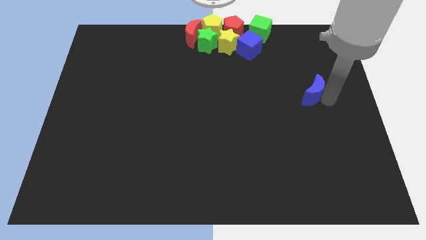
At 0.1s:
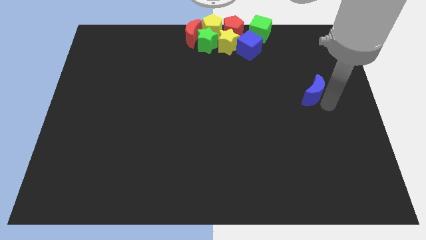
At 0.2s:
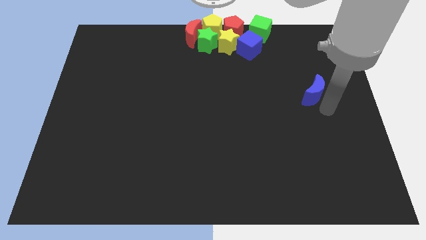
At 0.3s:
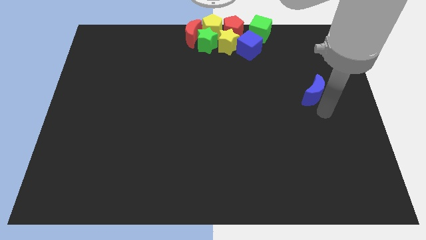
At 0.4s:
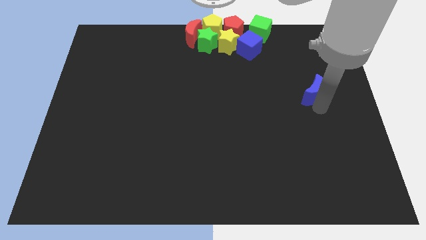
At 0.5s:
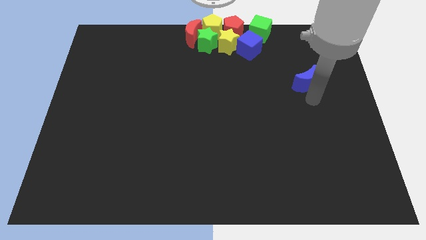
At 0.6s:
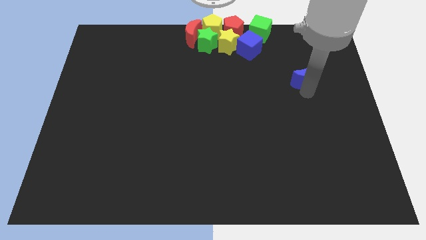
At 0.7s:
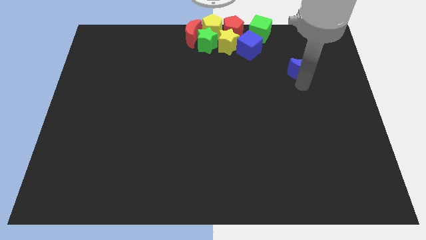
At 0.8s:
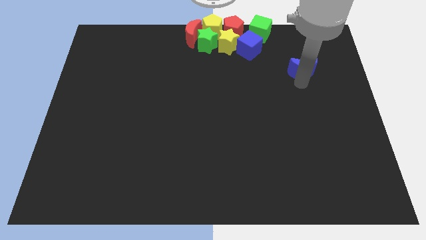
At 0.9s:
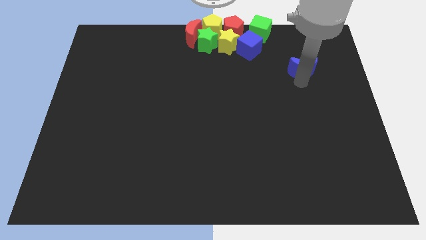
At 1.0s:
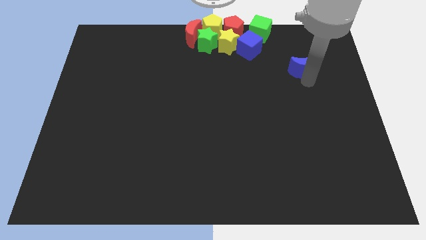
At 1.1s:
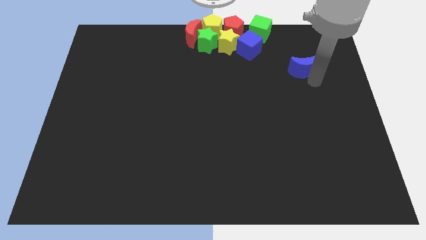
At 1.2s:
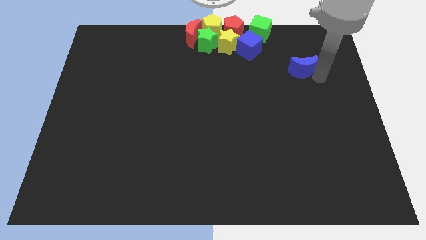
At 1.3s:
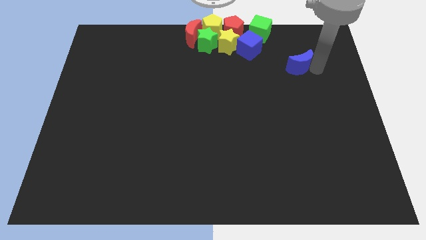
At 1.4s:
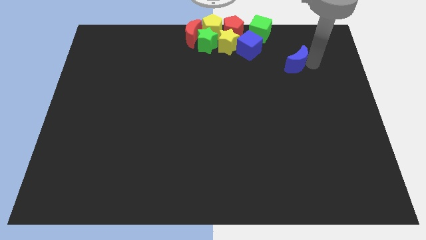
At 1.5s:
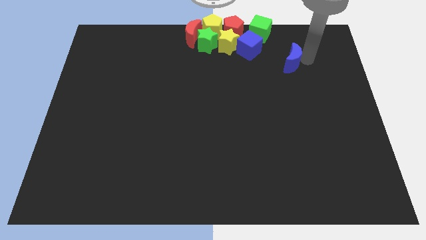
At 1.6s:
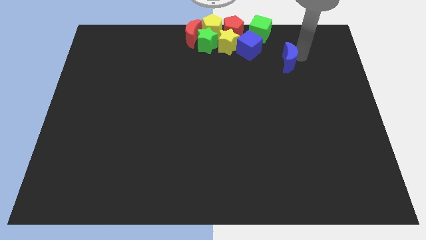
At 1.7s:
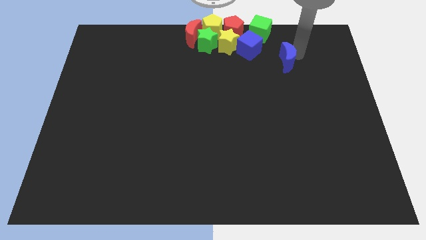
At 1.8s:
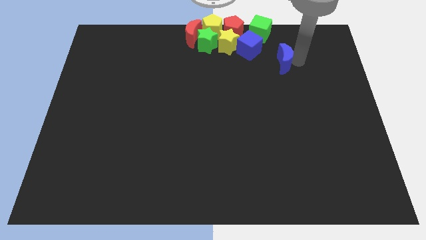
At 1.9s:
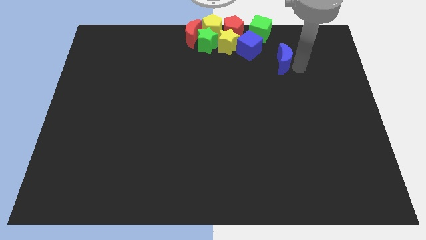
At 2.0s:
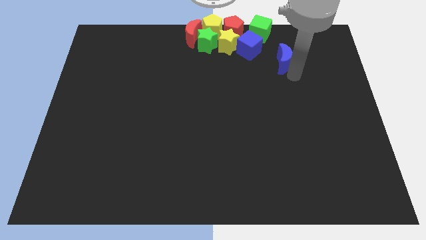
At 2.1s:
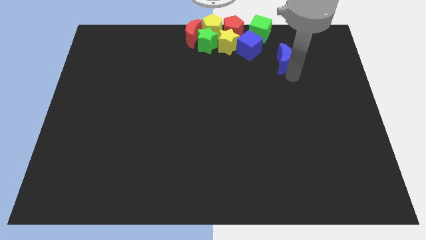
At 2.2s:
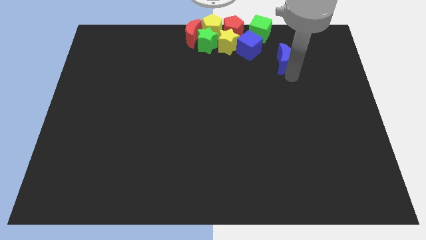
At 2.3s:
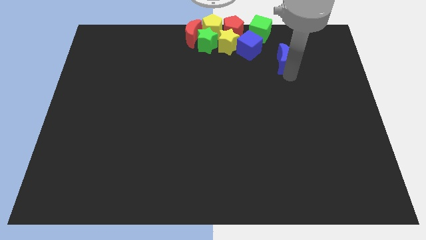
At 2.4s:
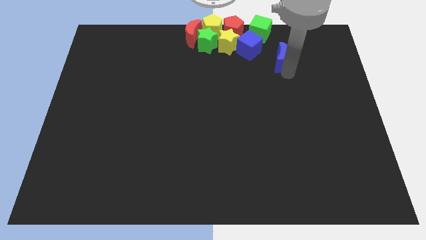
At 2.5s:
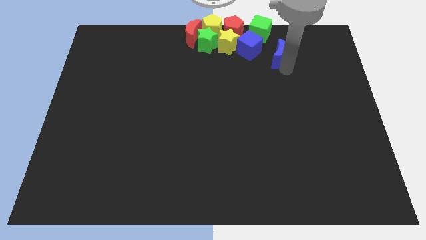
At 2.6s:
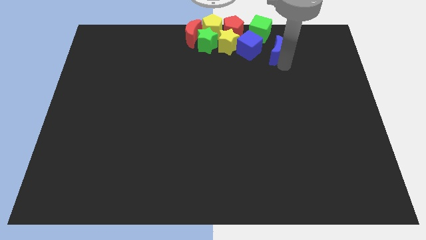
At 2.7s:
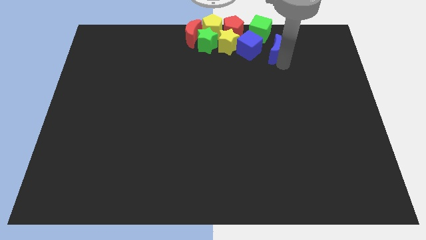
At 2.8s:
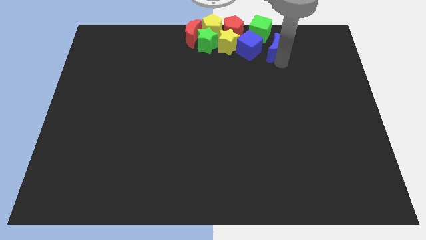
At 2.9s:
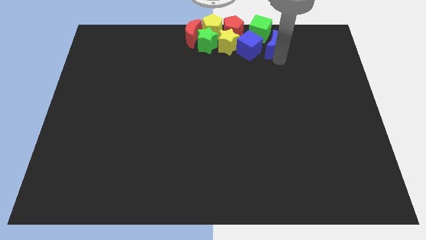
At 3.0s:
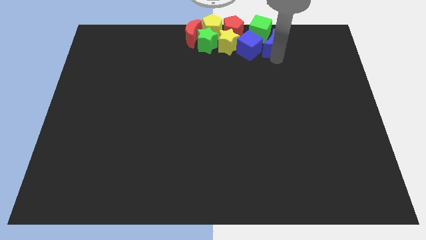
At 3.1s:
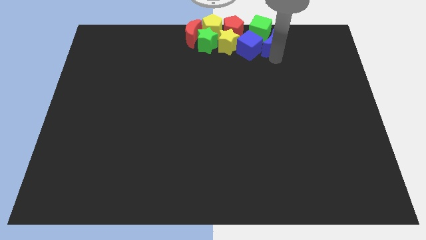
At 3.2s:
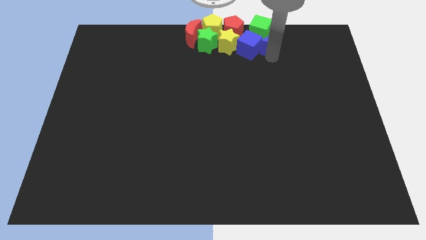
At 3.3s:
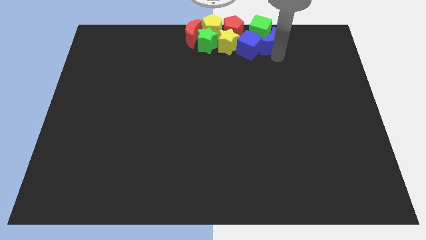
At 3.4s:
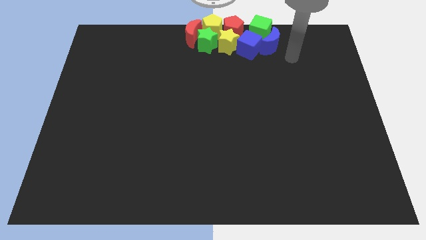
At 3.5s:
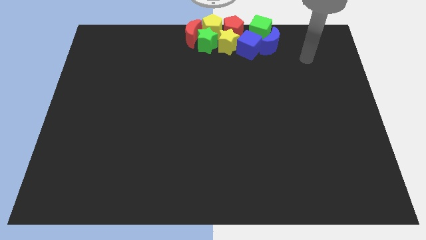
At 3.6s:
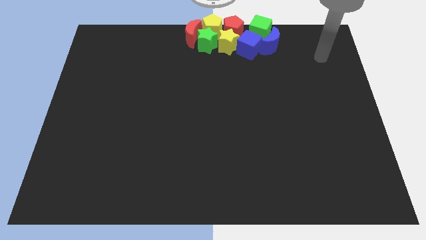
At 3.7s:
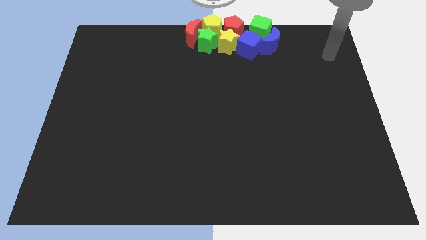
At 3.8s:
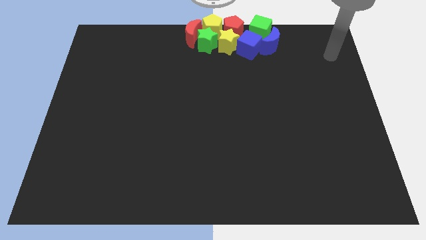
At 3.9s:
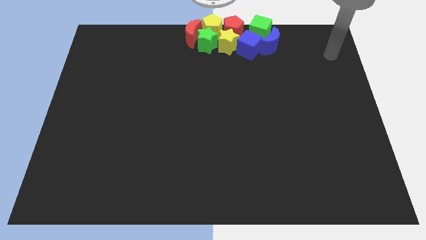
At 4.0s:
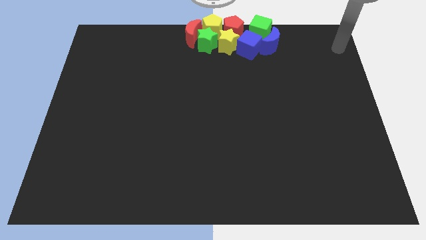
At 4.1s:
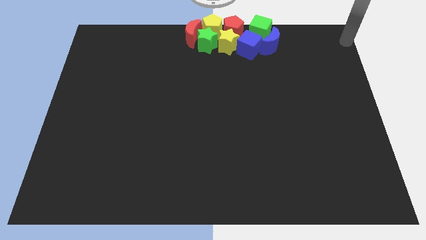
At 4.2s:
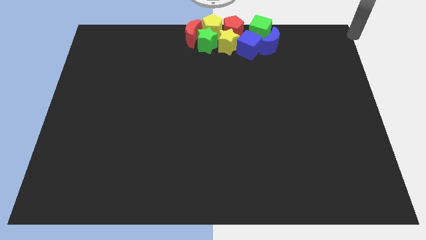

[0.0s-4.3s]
push the blue crescent into the green and blue cube

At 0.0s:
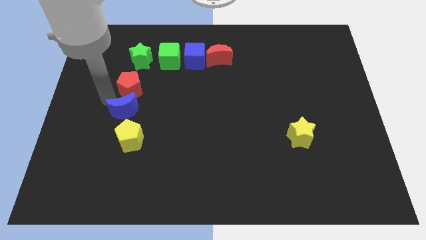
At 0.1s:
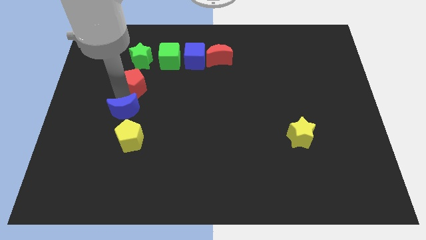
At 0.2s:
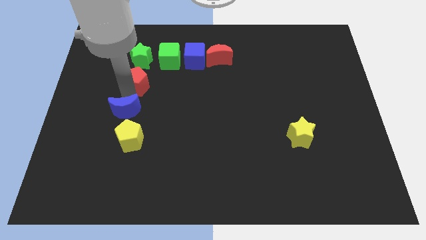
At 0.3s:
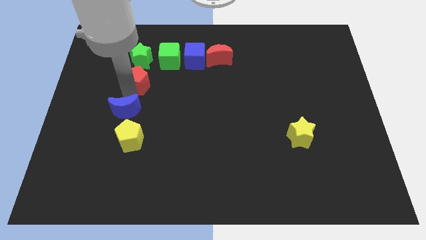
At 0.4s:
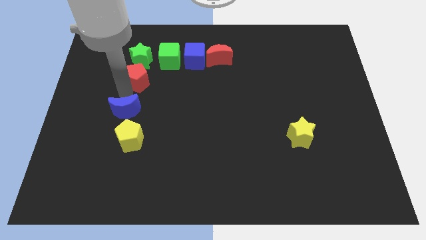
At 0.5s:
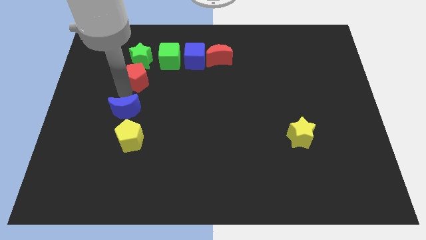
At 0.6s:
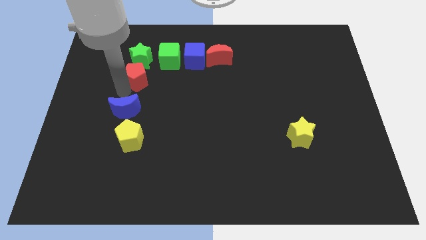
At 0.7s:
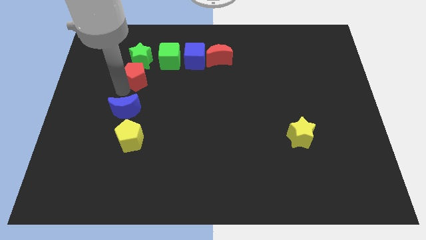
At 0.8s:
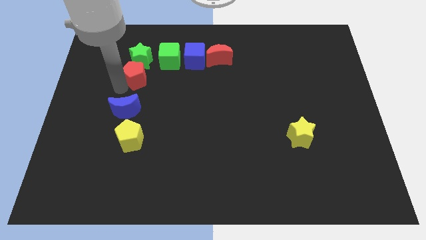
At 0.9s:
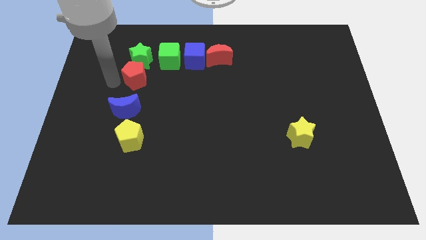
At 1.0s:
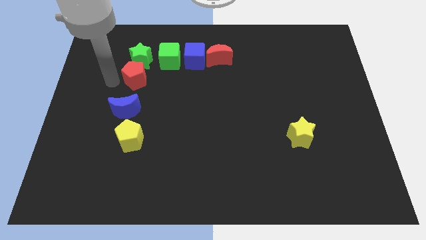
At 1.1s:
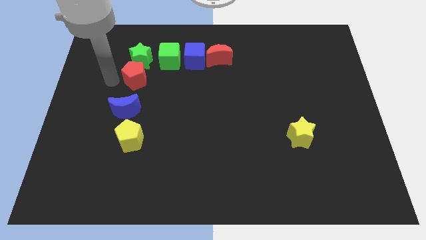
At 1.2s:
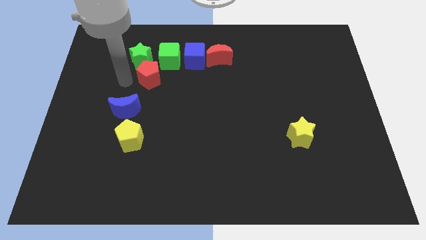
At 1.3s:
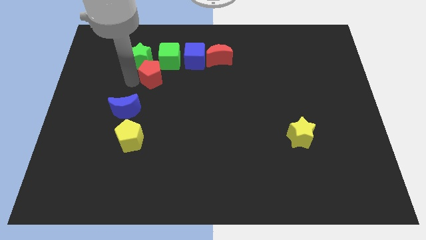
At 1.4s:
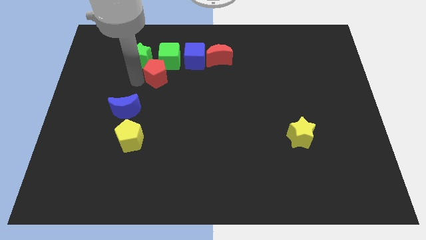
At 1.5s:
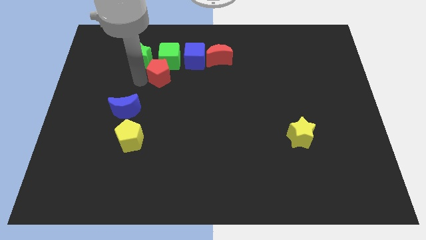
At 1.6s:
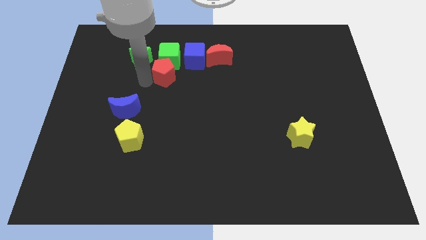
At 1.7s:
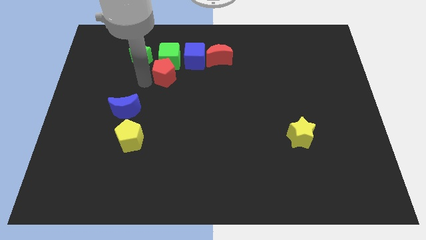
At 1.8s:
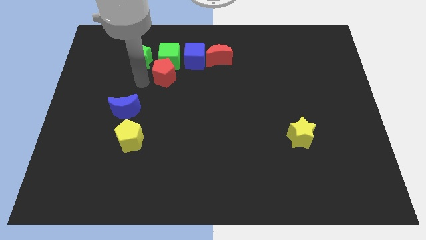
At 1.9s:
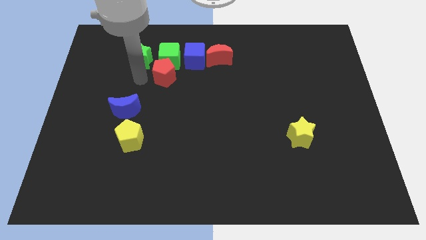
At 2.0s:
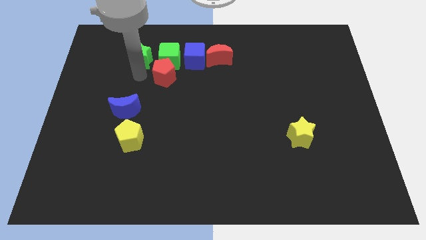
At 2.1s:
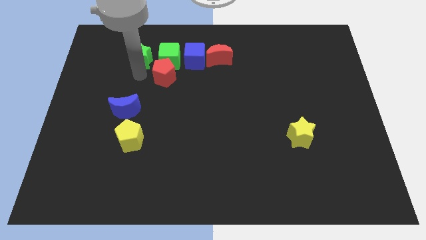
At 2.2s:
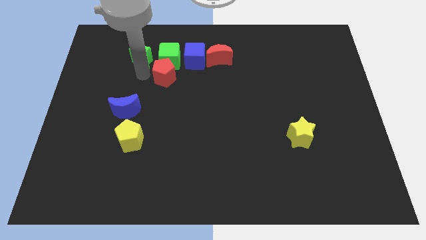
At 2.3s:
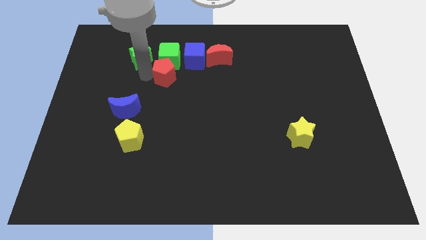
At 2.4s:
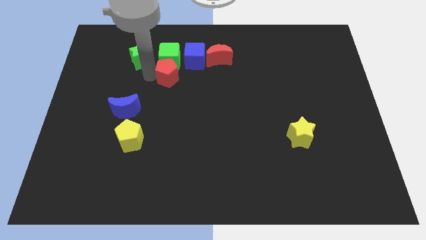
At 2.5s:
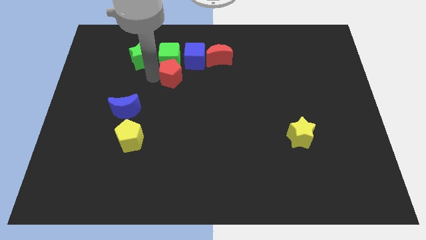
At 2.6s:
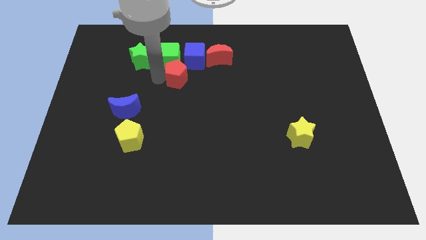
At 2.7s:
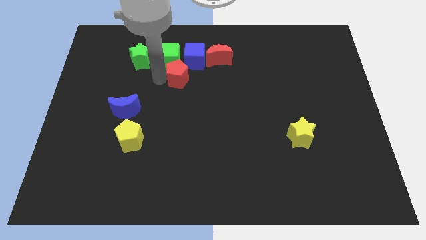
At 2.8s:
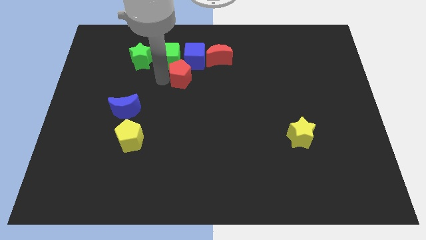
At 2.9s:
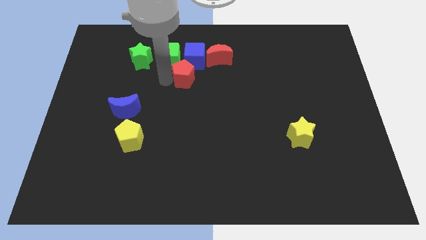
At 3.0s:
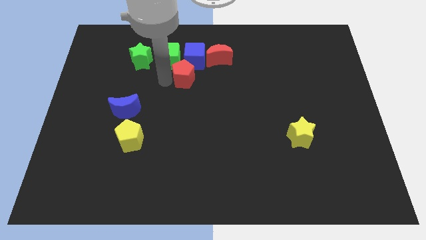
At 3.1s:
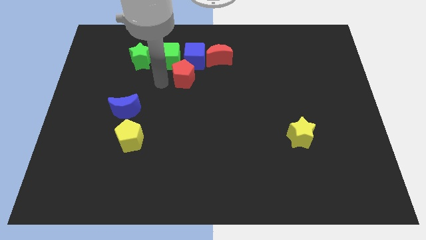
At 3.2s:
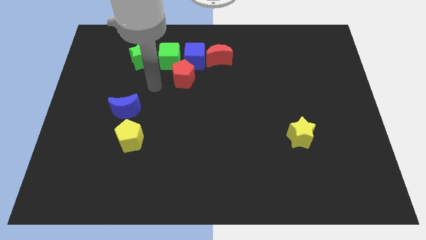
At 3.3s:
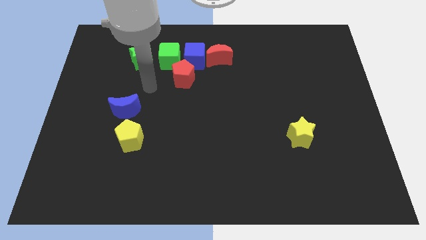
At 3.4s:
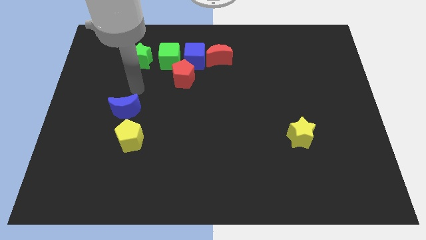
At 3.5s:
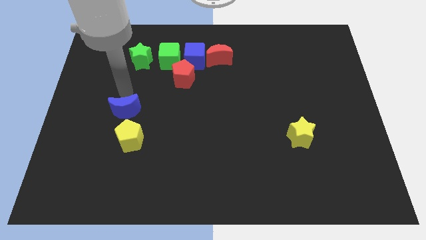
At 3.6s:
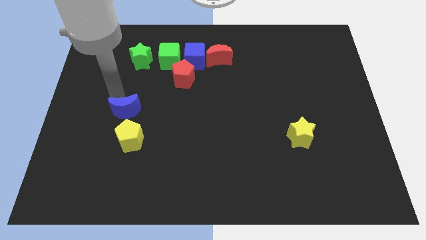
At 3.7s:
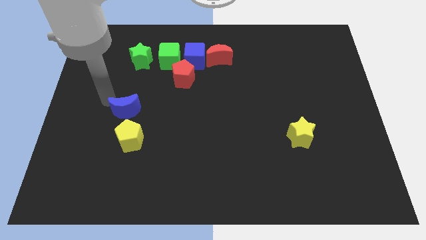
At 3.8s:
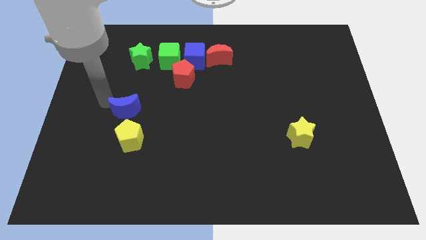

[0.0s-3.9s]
put the red pentagon at the bottom center of the green cube and blue cube

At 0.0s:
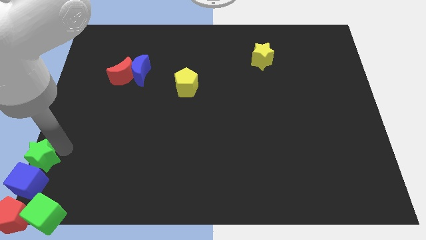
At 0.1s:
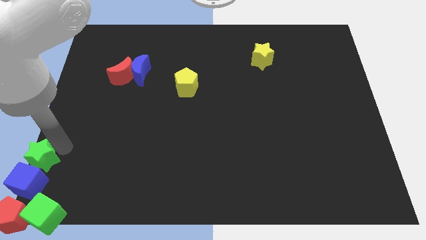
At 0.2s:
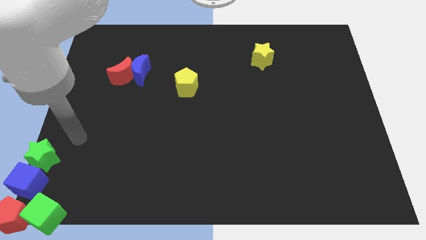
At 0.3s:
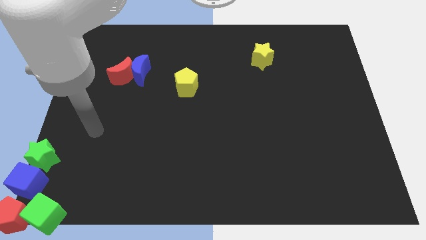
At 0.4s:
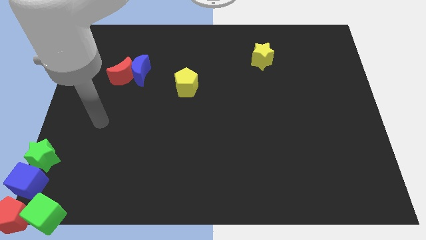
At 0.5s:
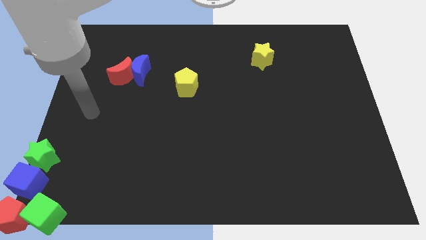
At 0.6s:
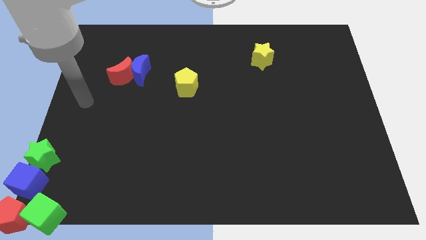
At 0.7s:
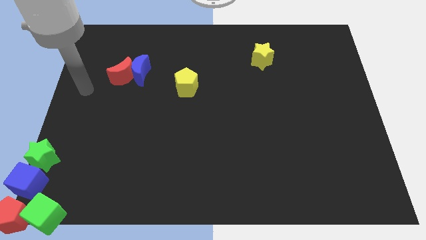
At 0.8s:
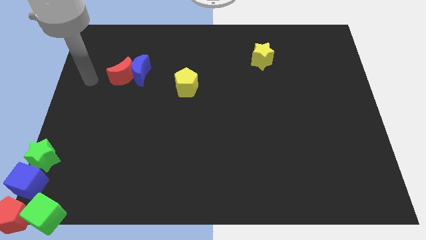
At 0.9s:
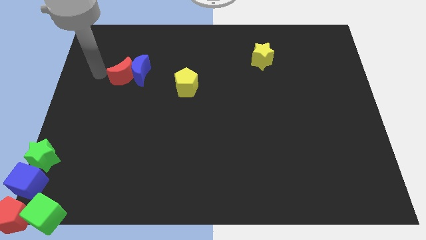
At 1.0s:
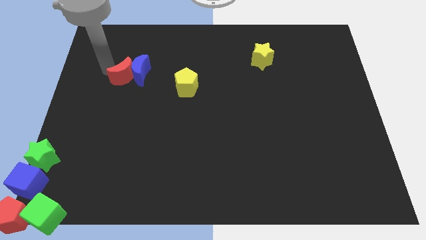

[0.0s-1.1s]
move your arm away from the green star
